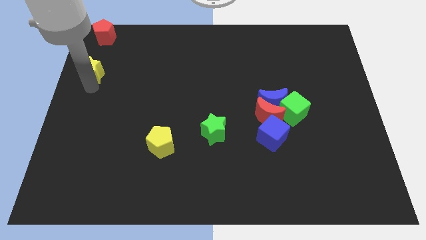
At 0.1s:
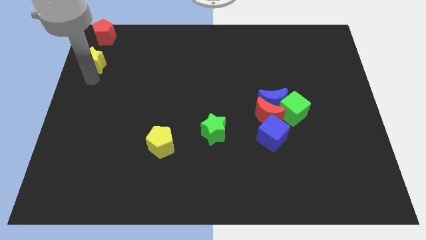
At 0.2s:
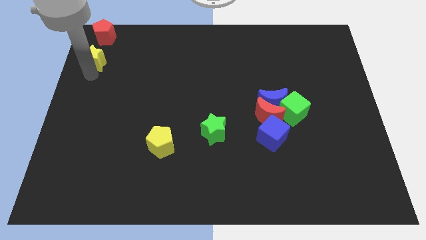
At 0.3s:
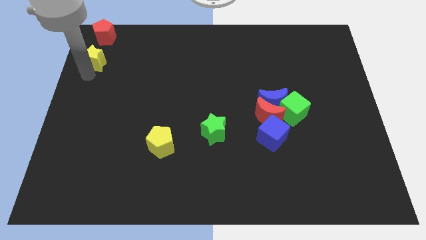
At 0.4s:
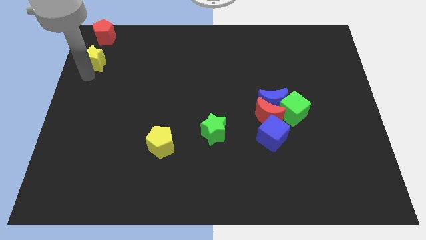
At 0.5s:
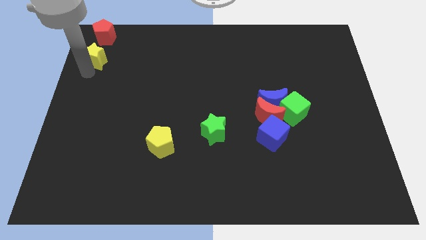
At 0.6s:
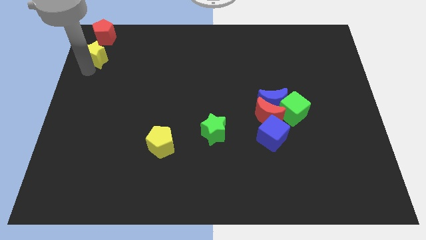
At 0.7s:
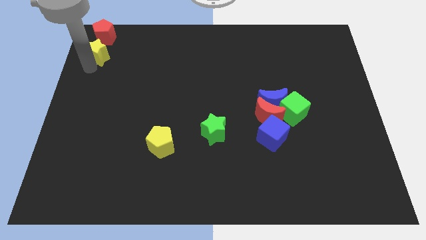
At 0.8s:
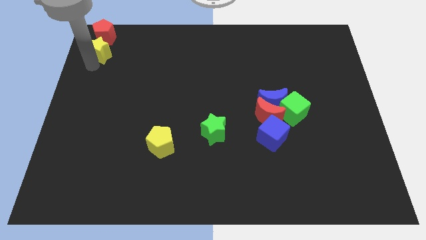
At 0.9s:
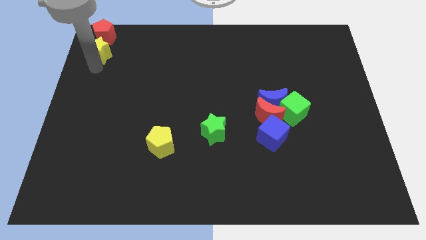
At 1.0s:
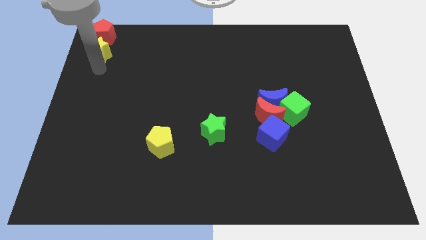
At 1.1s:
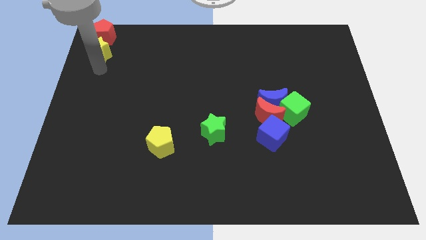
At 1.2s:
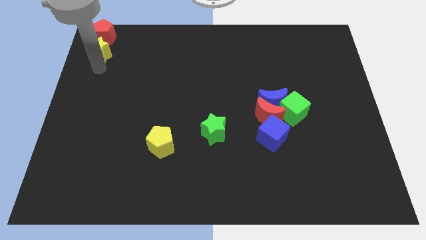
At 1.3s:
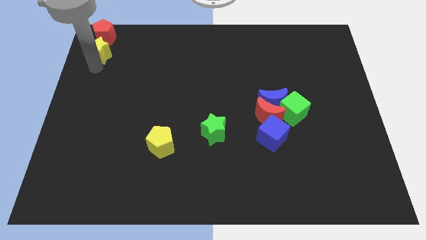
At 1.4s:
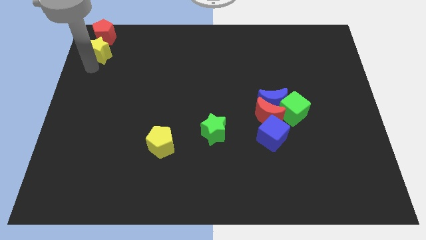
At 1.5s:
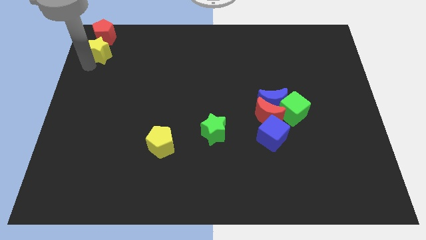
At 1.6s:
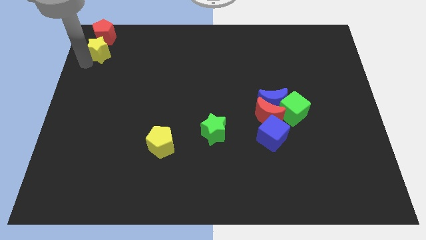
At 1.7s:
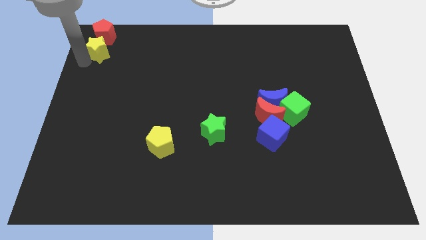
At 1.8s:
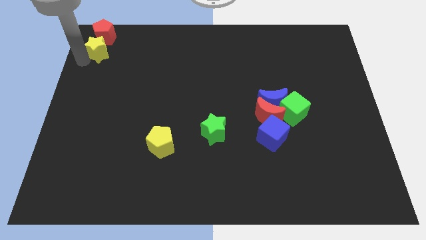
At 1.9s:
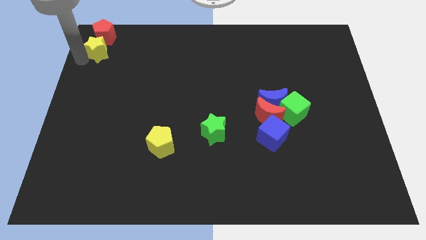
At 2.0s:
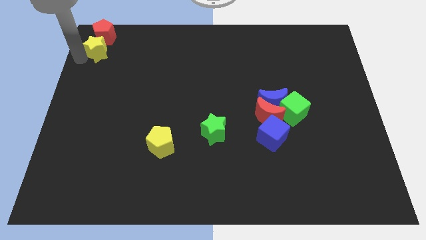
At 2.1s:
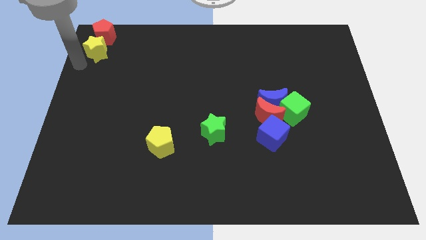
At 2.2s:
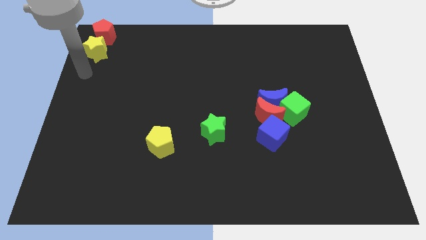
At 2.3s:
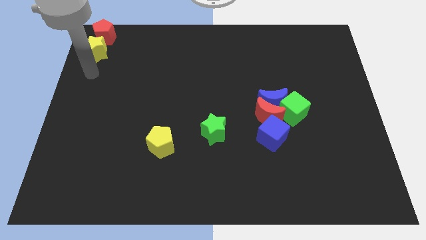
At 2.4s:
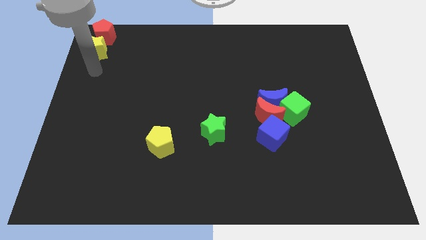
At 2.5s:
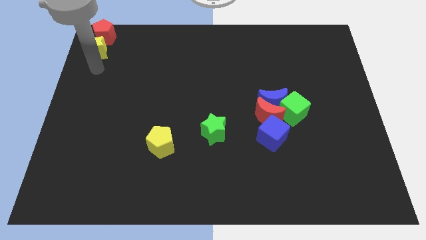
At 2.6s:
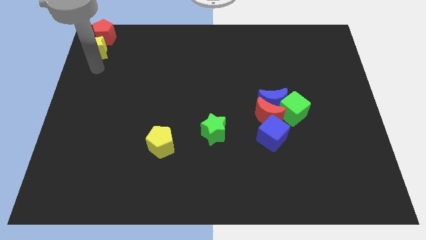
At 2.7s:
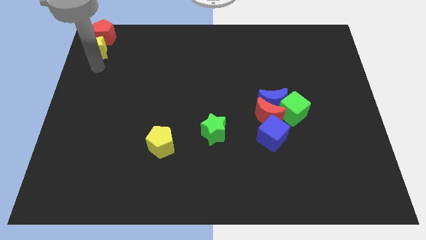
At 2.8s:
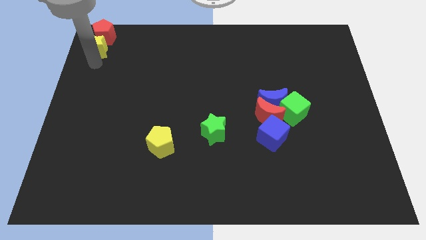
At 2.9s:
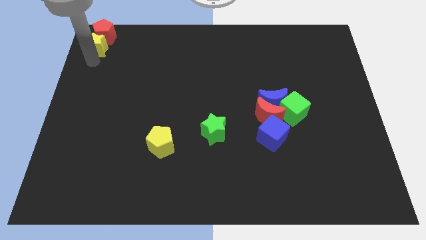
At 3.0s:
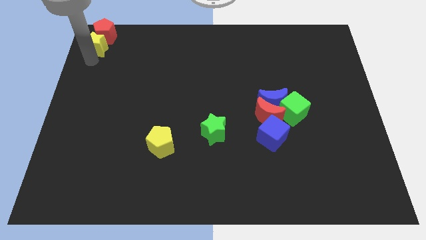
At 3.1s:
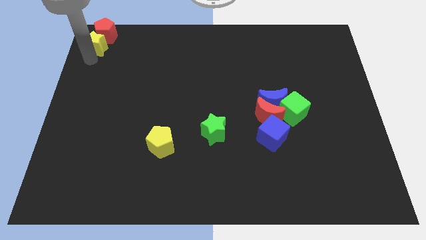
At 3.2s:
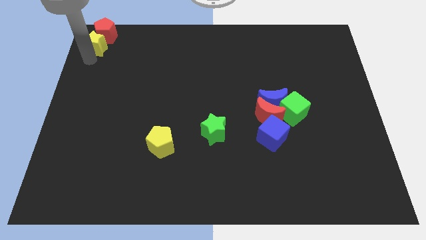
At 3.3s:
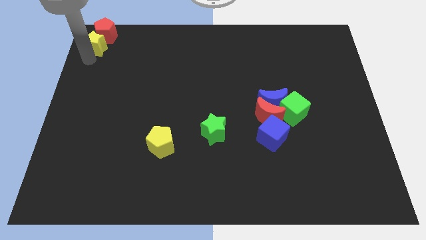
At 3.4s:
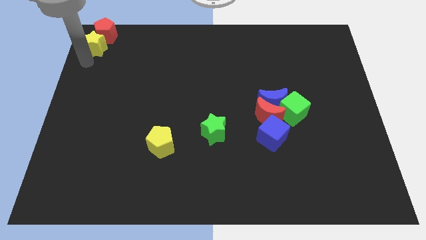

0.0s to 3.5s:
push the yellow star into red pentagon

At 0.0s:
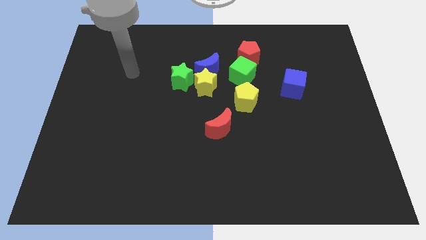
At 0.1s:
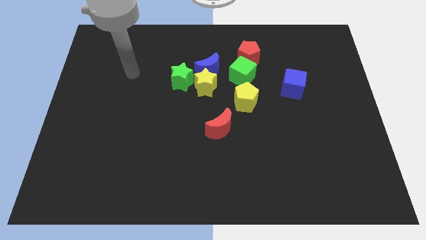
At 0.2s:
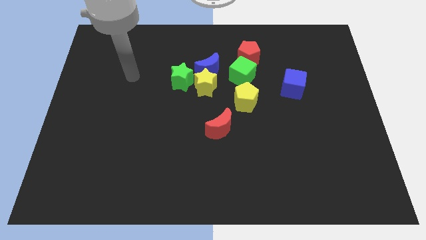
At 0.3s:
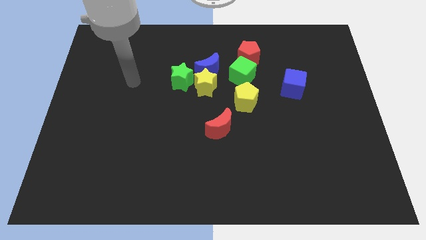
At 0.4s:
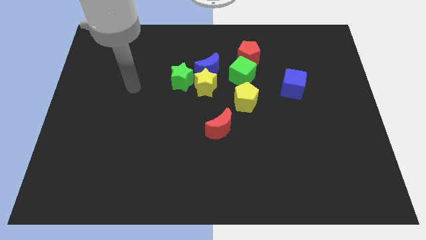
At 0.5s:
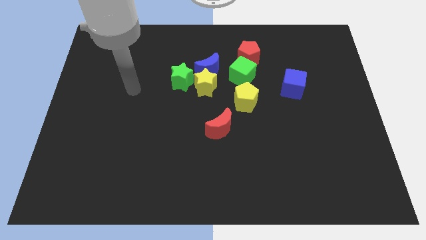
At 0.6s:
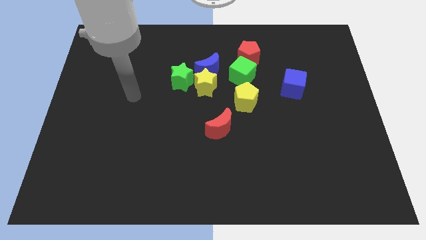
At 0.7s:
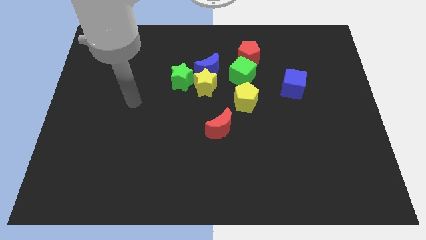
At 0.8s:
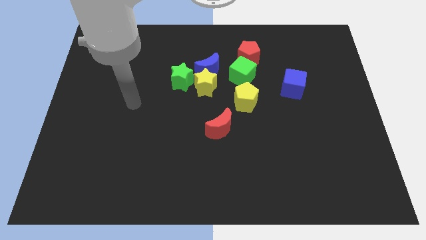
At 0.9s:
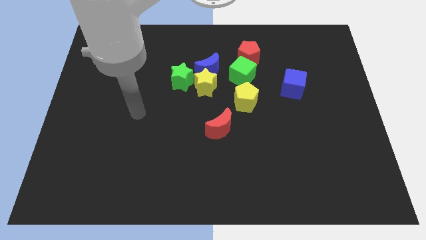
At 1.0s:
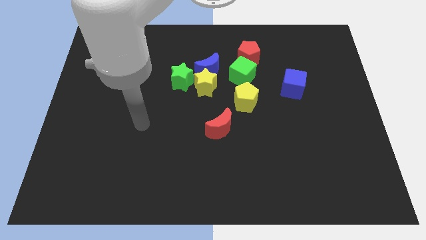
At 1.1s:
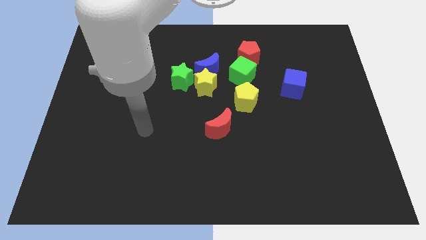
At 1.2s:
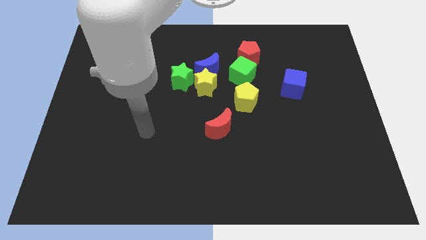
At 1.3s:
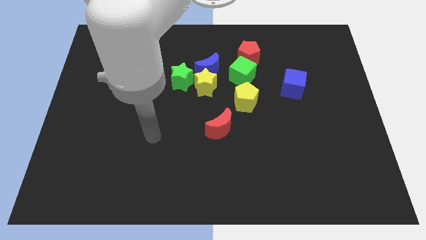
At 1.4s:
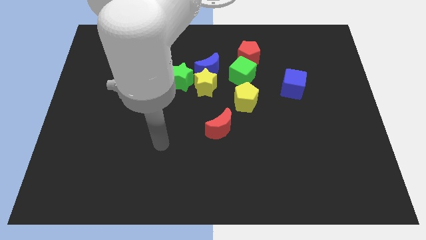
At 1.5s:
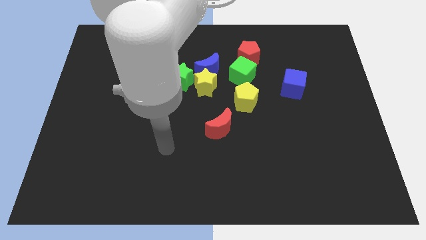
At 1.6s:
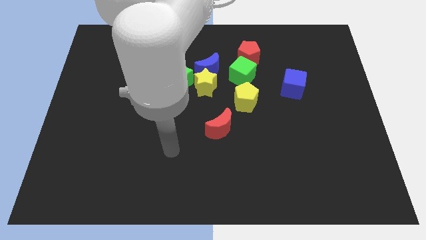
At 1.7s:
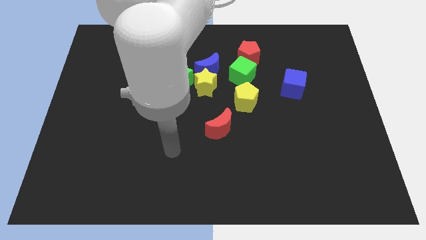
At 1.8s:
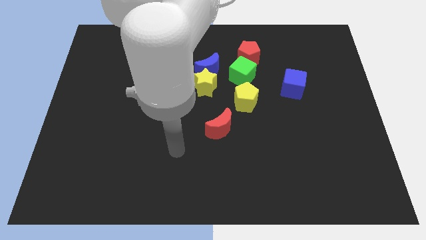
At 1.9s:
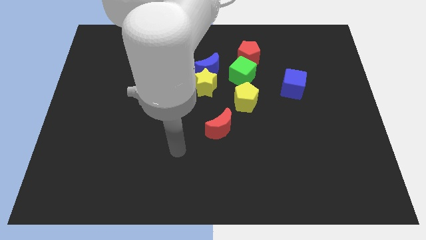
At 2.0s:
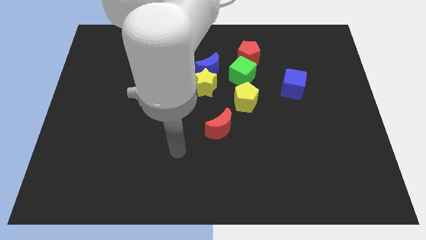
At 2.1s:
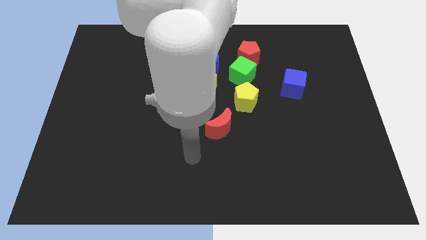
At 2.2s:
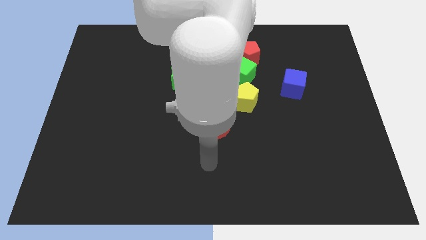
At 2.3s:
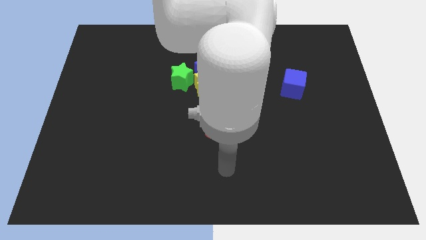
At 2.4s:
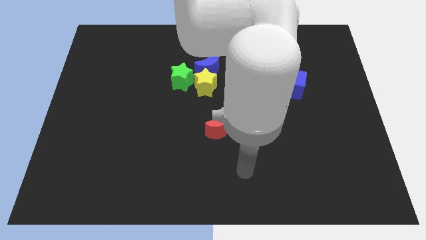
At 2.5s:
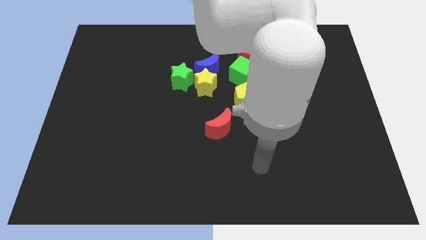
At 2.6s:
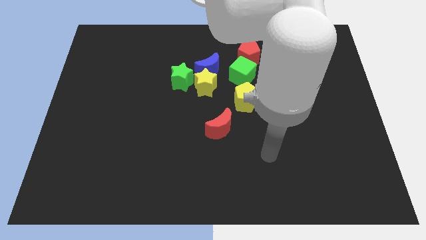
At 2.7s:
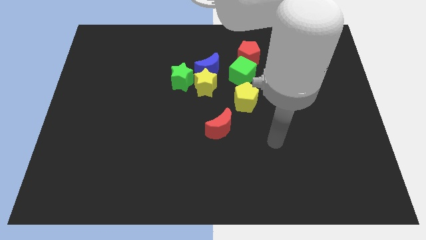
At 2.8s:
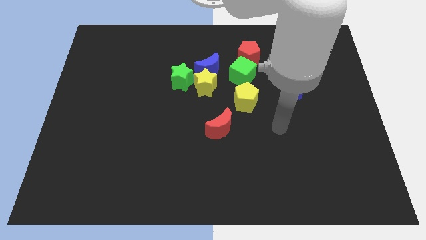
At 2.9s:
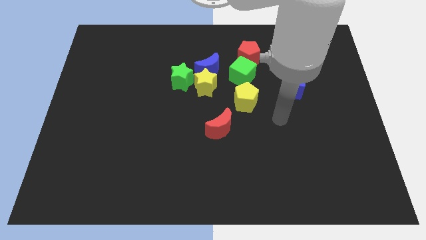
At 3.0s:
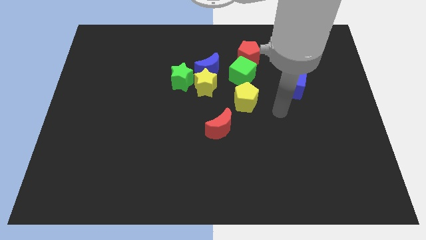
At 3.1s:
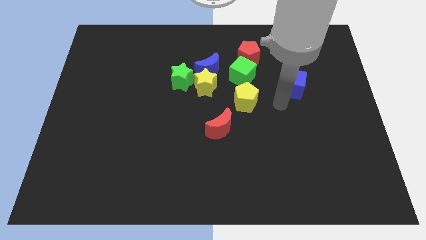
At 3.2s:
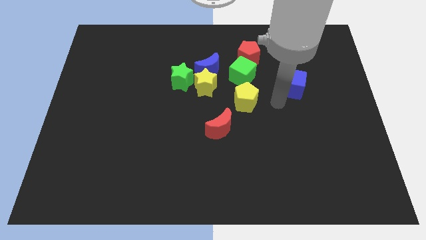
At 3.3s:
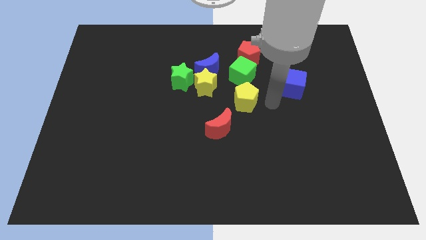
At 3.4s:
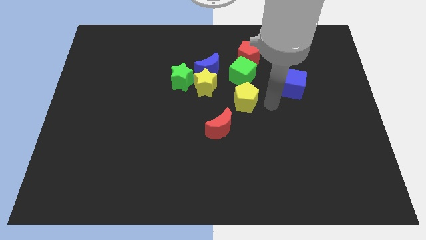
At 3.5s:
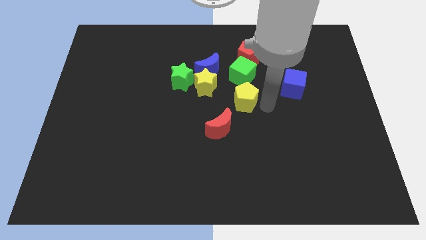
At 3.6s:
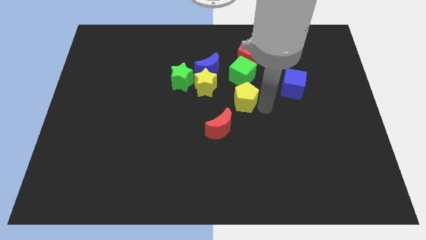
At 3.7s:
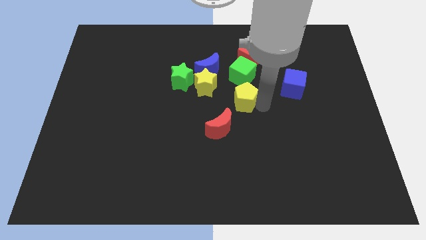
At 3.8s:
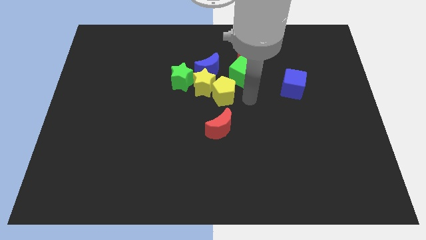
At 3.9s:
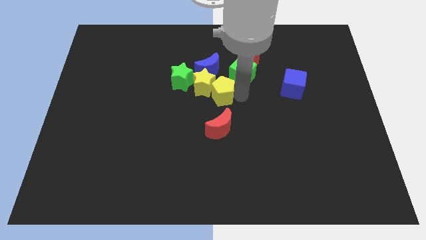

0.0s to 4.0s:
push the yellow pentagon to the right of the yellow star

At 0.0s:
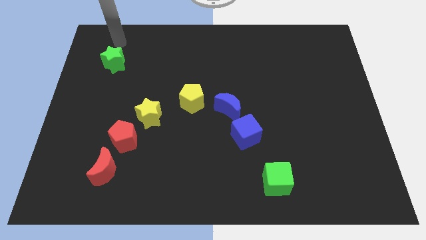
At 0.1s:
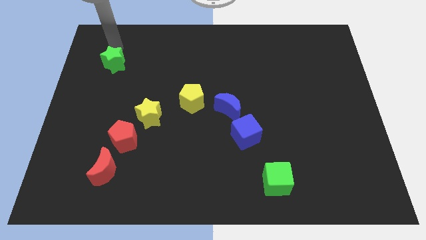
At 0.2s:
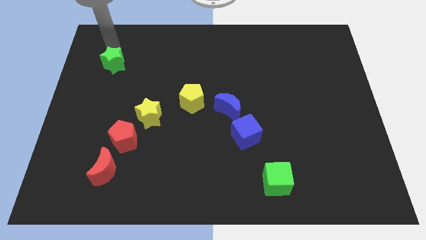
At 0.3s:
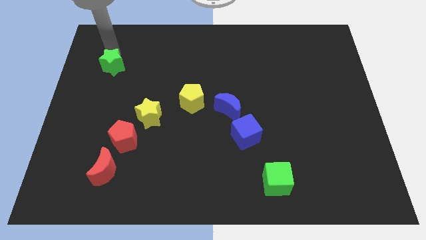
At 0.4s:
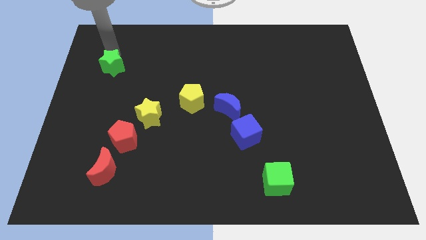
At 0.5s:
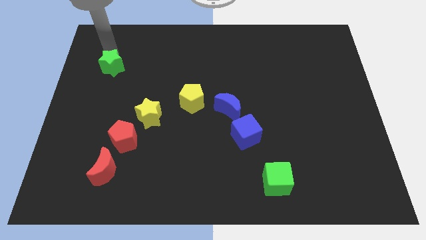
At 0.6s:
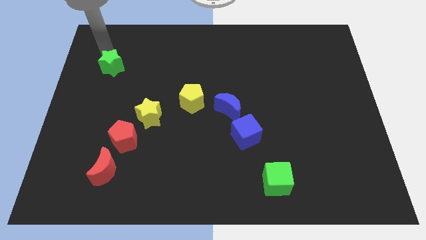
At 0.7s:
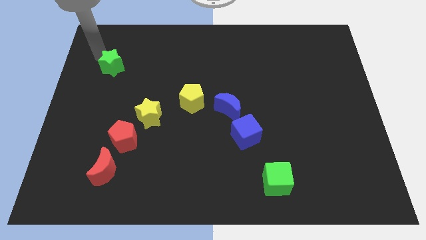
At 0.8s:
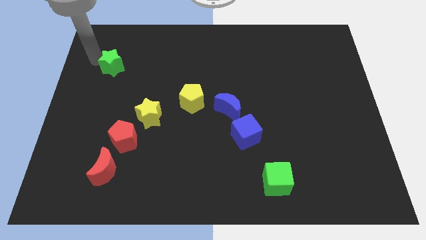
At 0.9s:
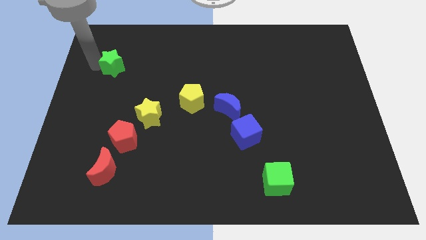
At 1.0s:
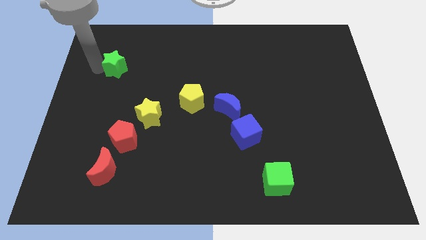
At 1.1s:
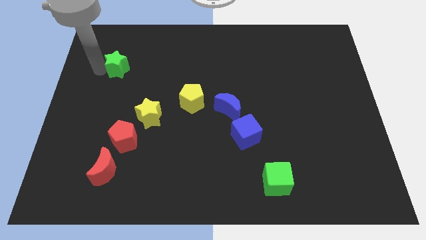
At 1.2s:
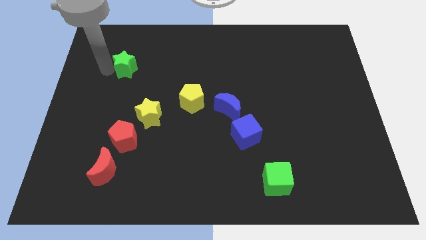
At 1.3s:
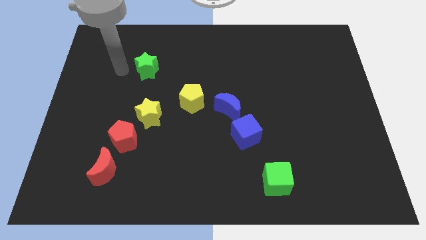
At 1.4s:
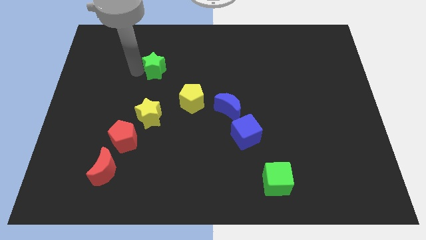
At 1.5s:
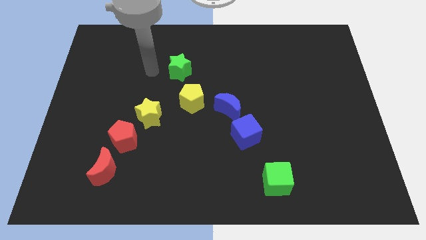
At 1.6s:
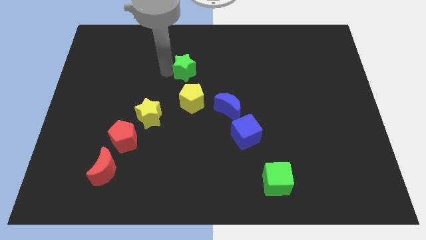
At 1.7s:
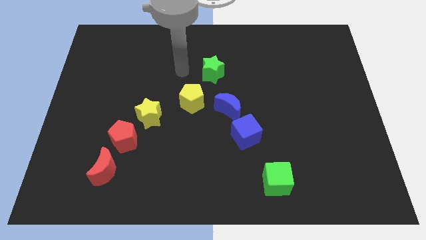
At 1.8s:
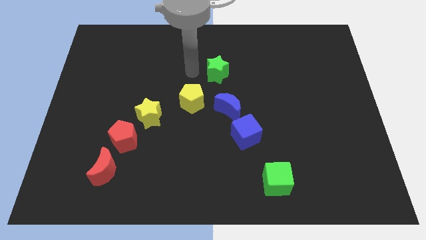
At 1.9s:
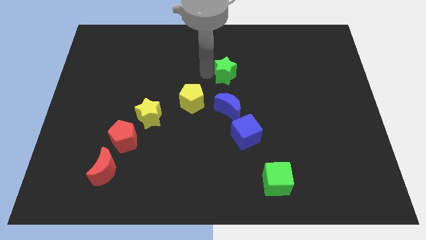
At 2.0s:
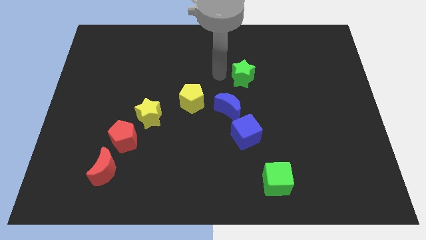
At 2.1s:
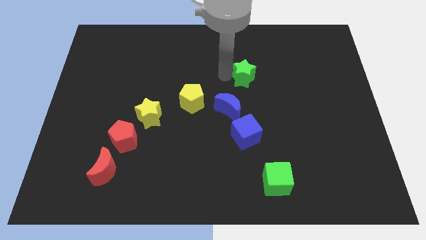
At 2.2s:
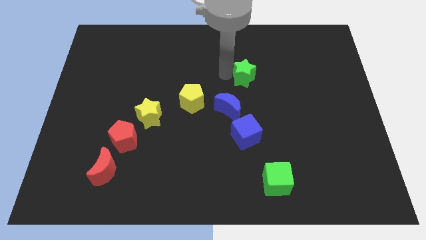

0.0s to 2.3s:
push the green star to right center of the board
